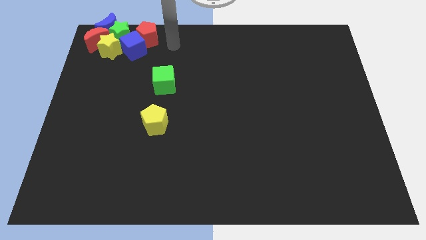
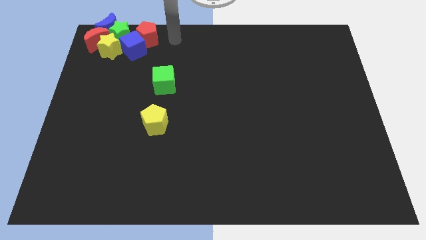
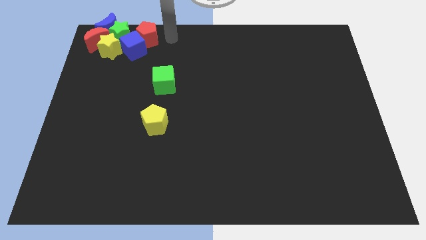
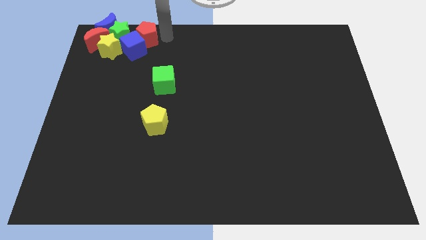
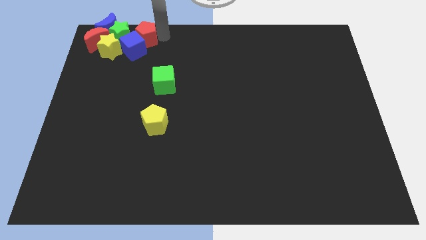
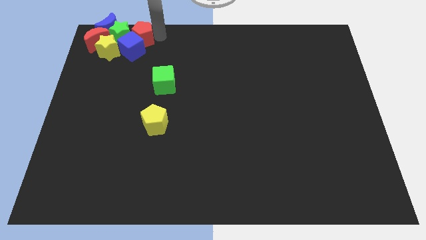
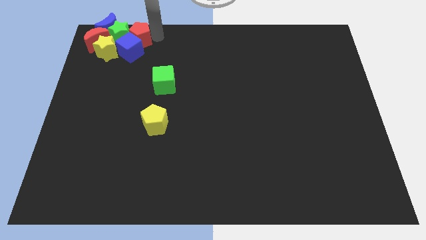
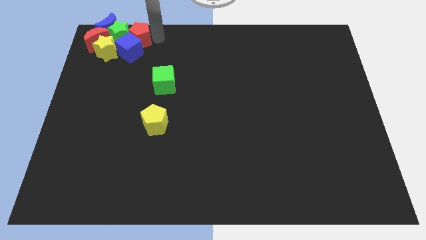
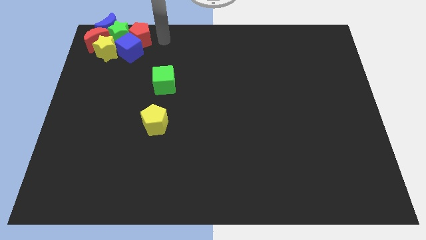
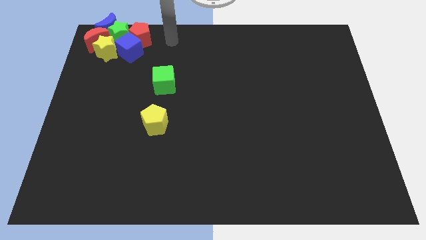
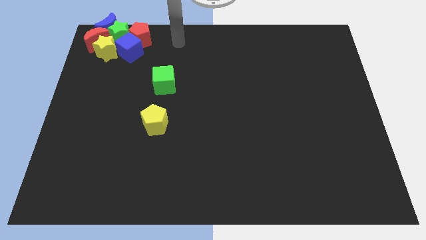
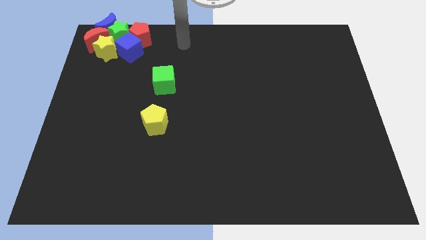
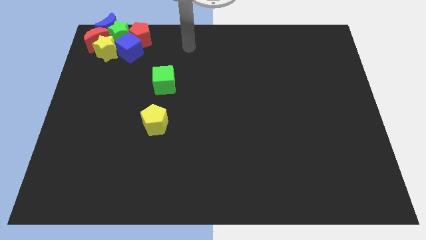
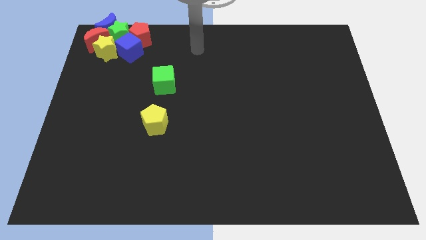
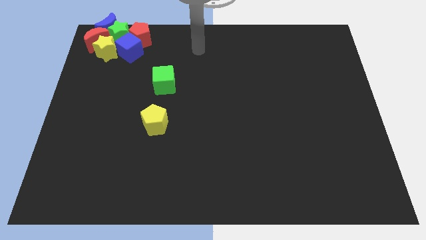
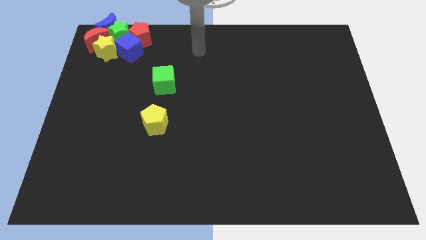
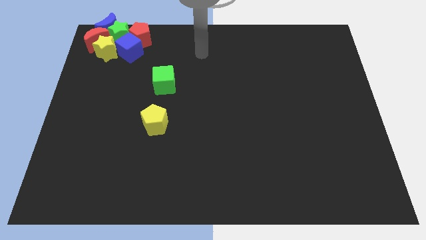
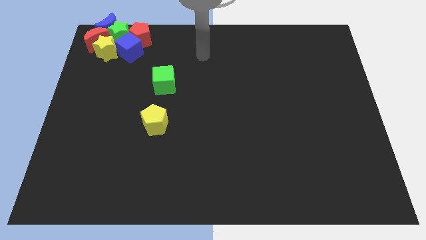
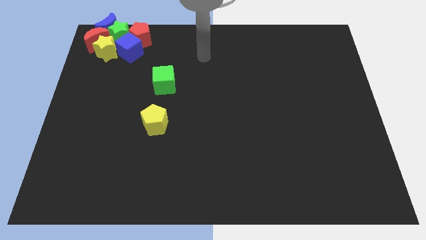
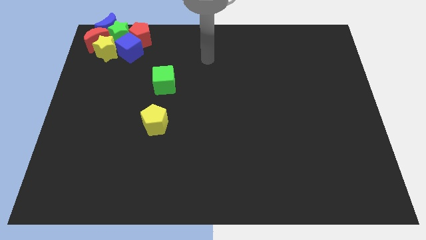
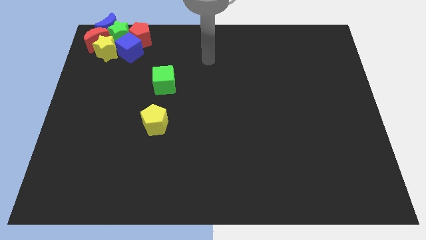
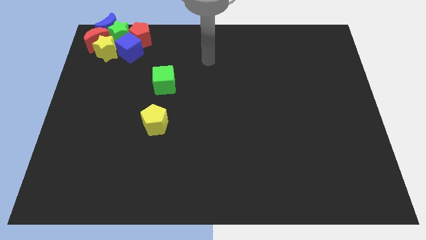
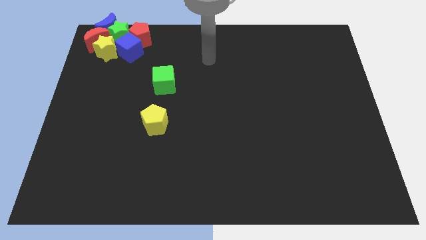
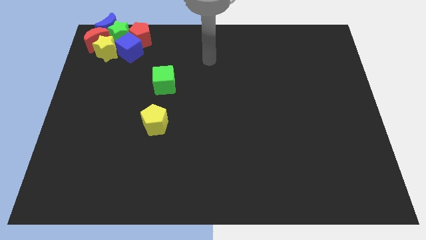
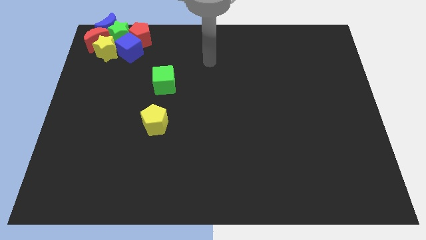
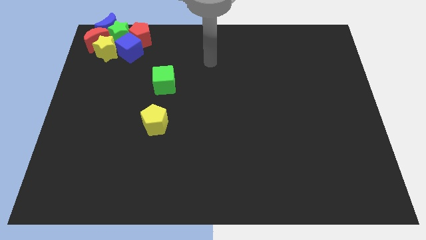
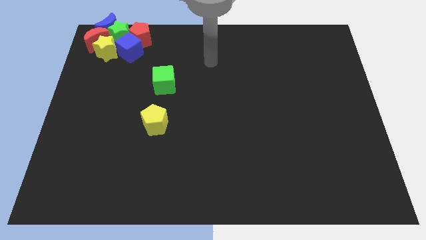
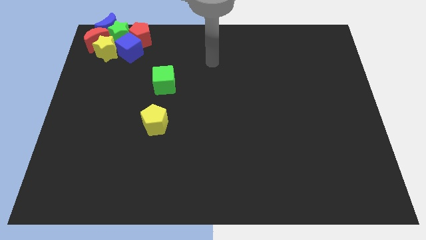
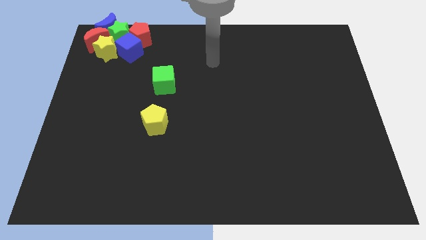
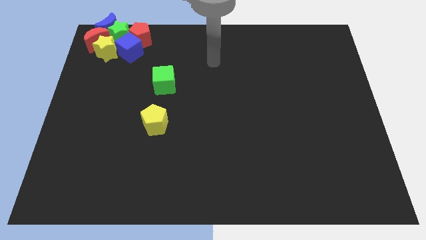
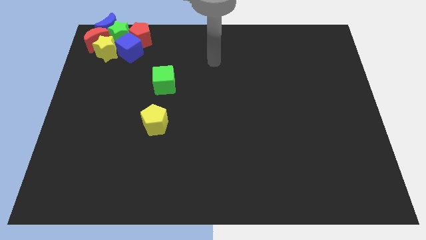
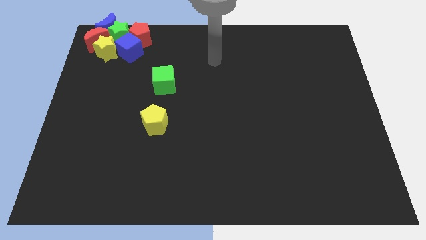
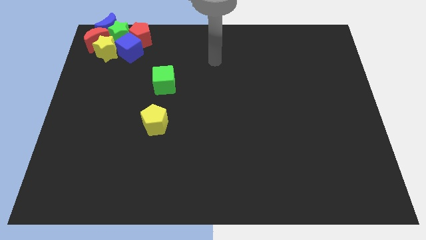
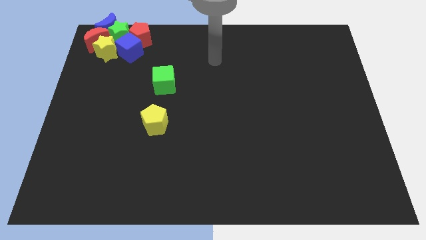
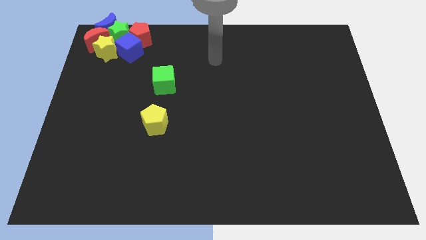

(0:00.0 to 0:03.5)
adjust the group of blocks close to each other

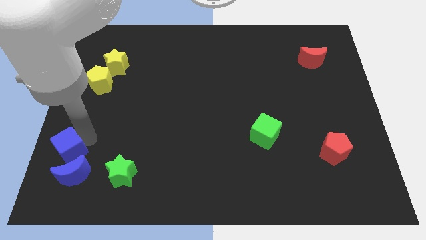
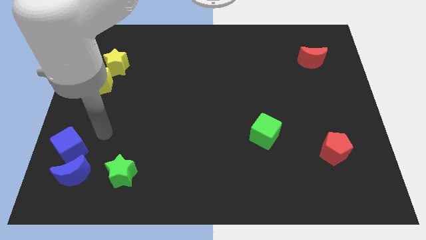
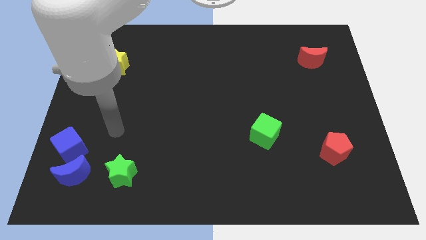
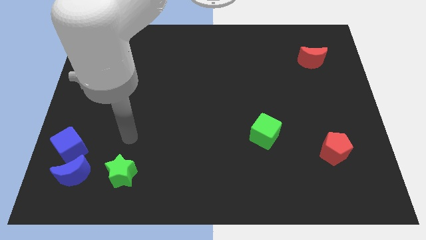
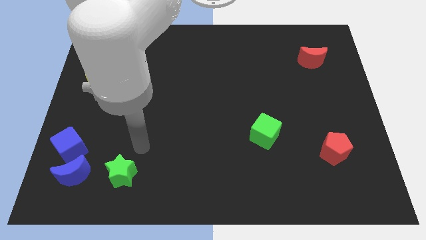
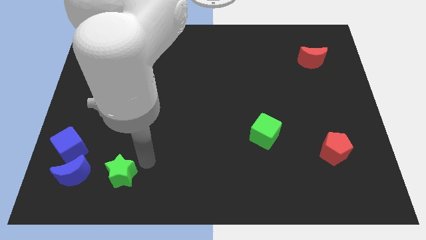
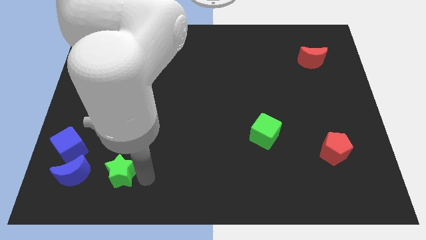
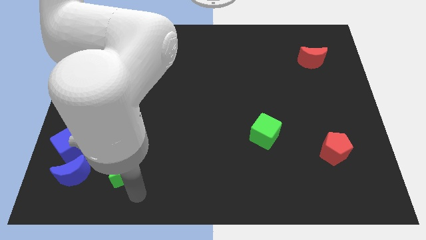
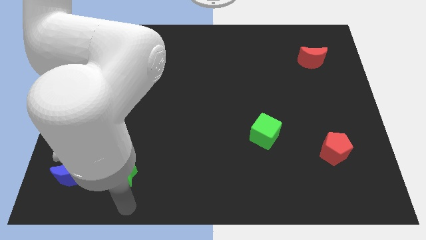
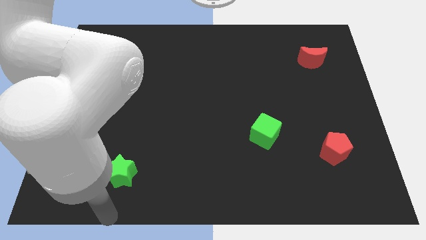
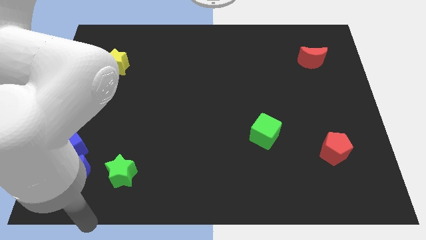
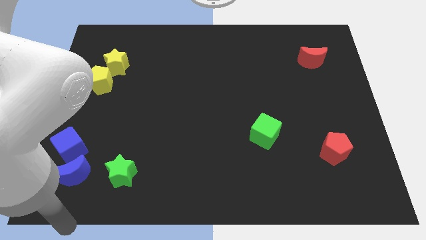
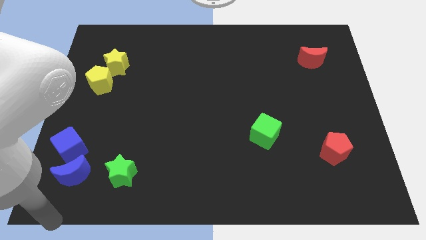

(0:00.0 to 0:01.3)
place your hand below the blue blocks

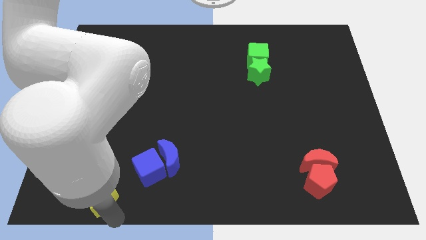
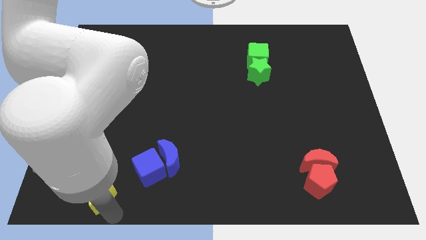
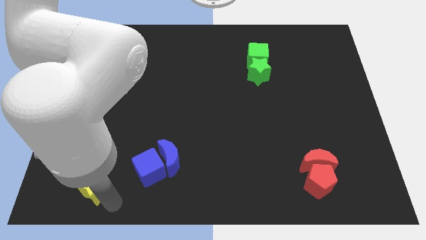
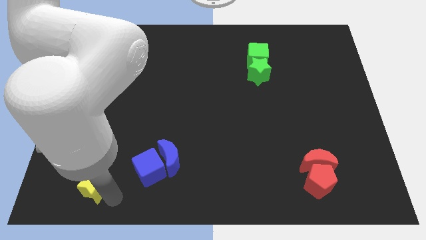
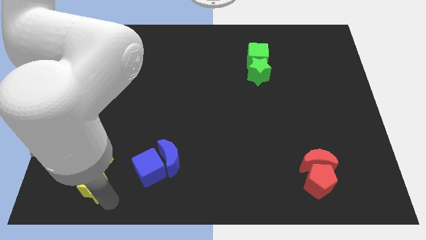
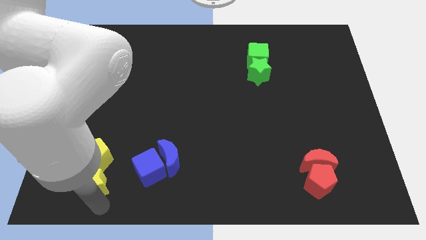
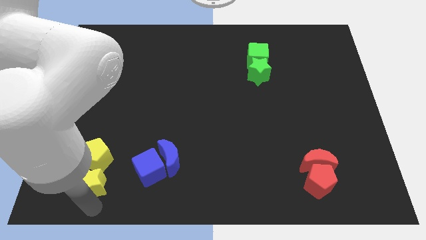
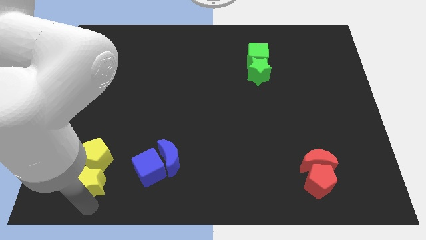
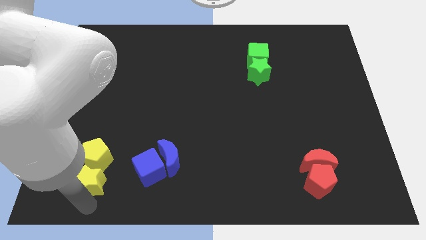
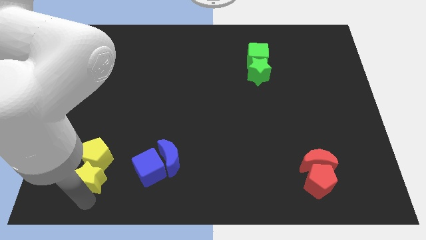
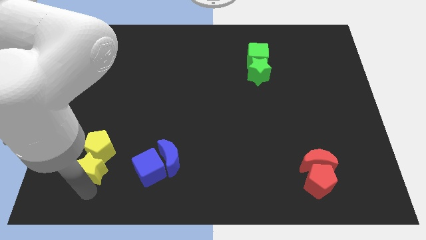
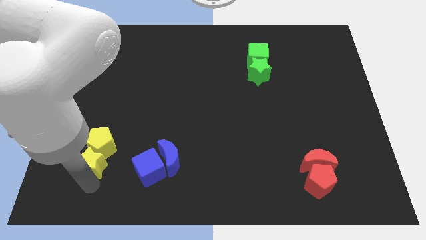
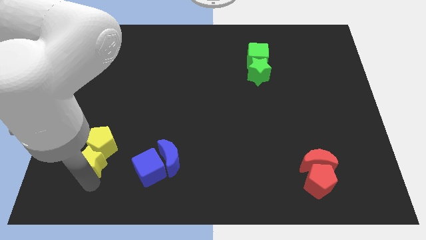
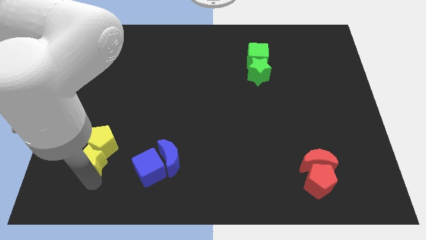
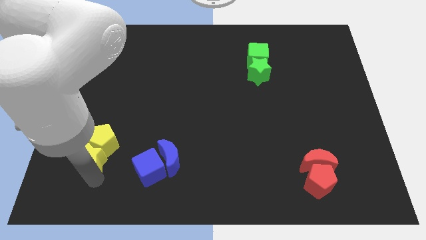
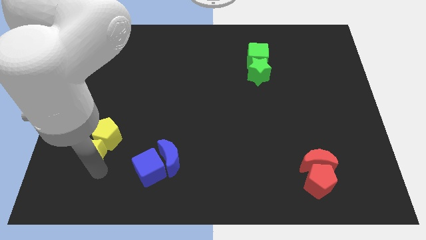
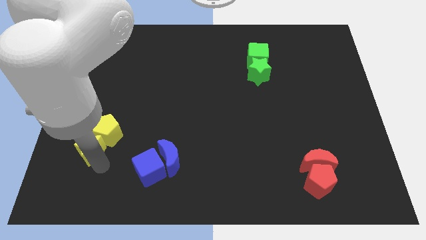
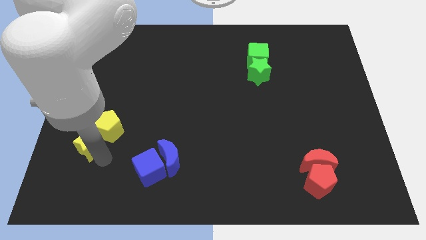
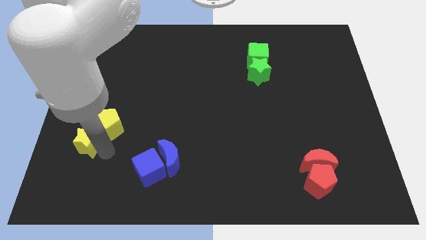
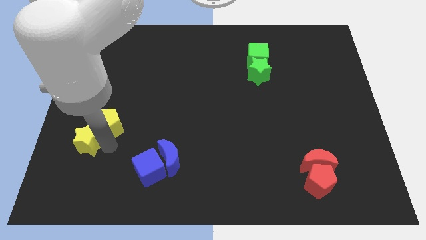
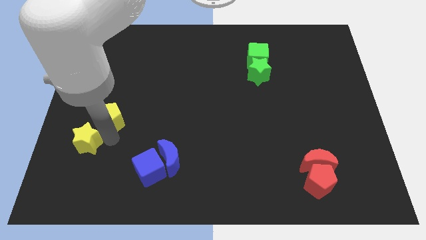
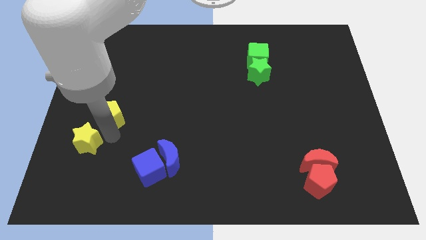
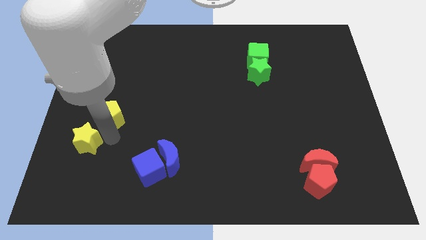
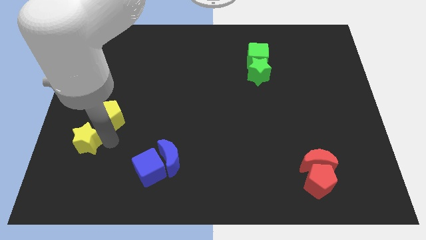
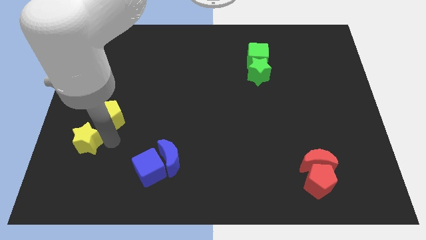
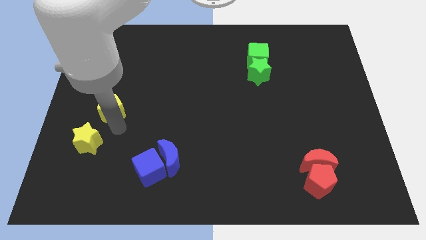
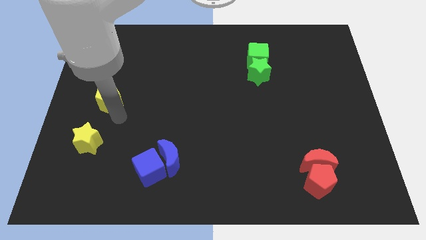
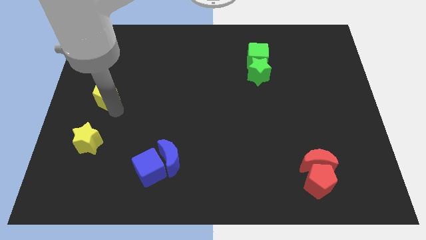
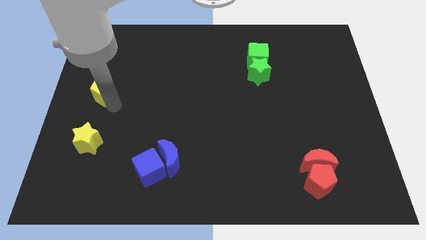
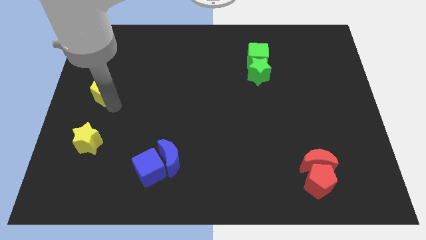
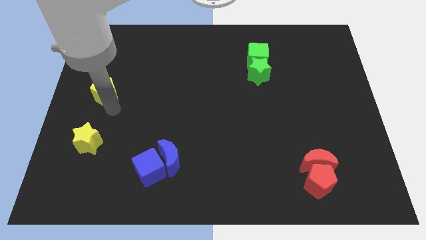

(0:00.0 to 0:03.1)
separate yellow pentagon from yellow star

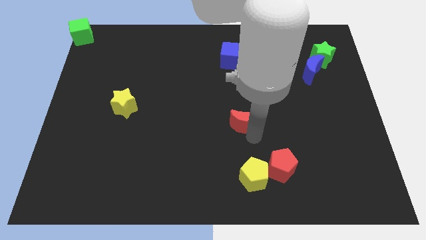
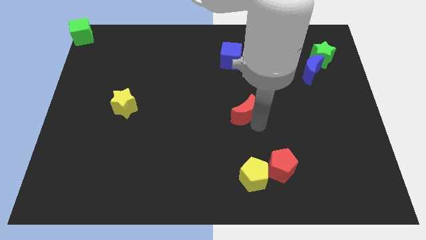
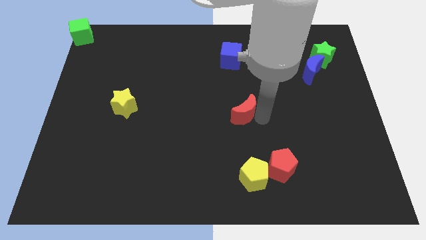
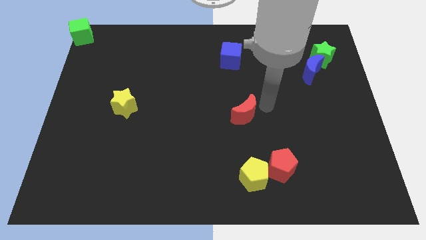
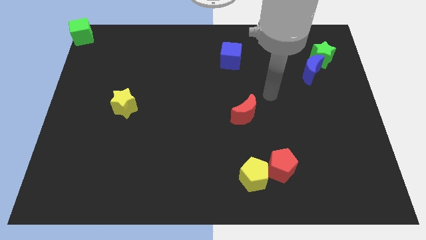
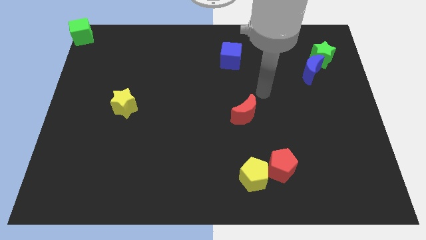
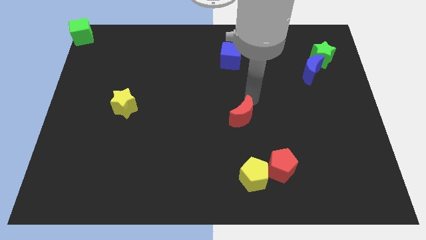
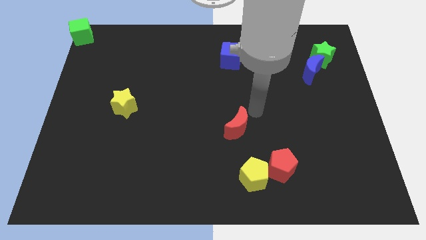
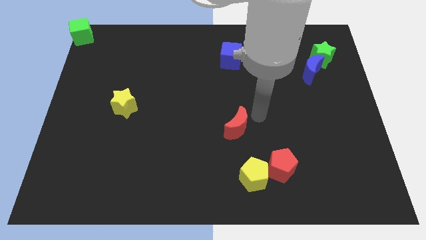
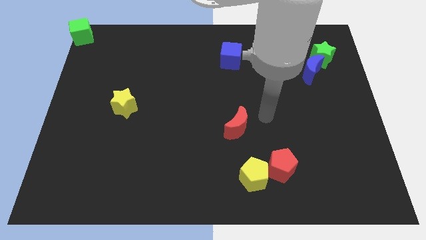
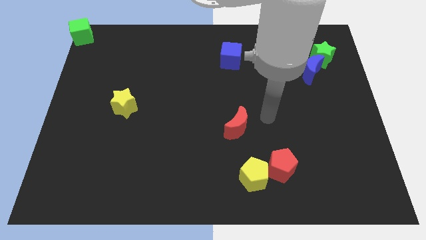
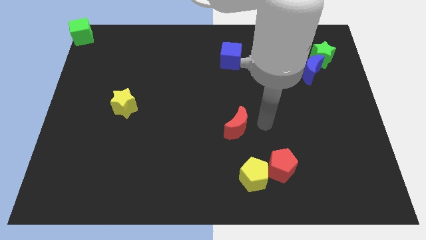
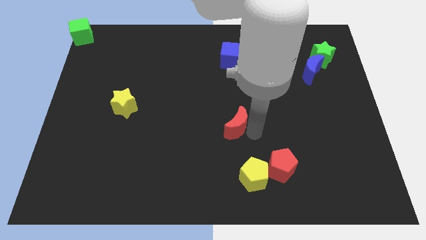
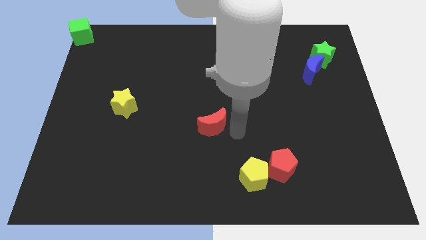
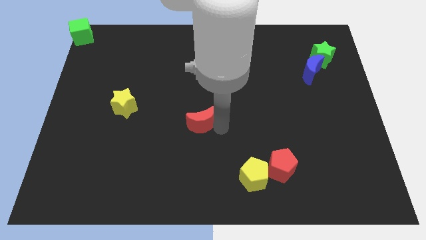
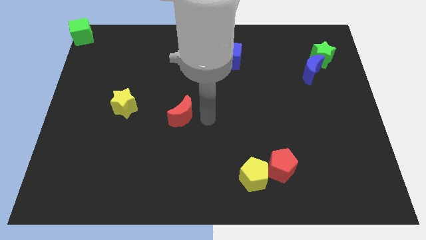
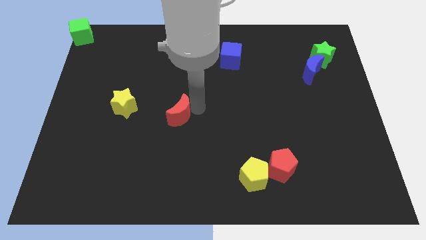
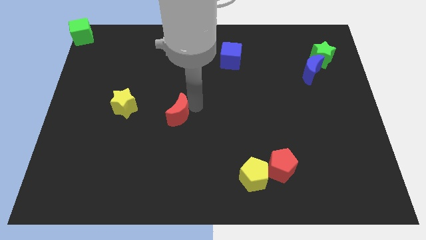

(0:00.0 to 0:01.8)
place the red crescent to the right of the yellow star
